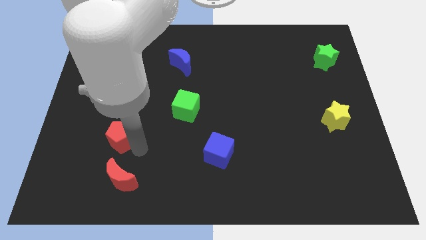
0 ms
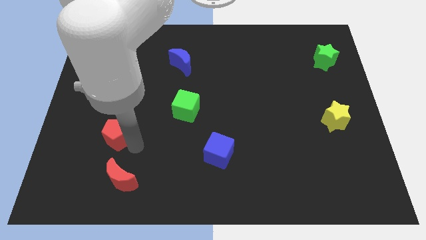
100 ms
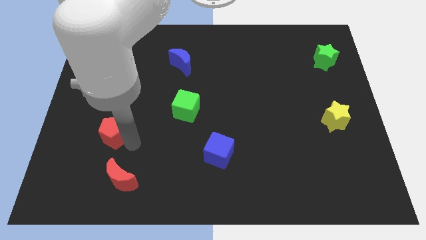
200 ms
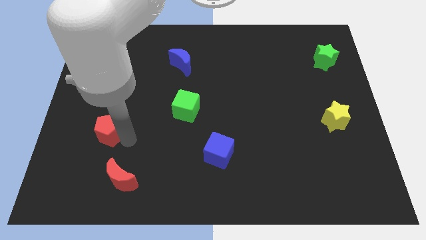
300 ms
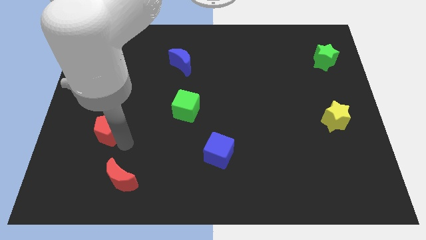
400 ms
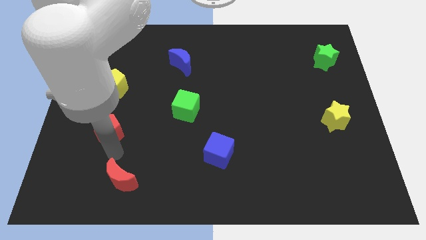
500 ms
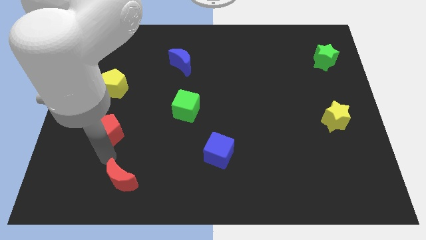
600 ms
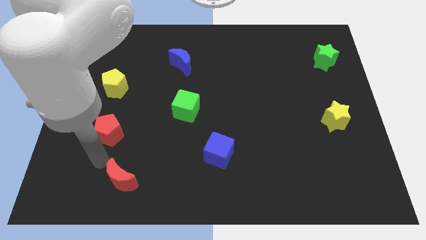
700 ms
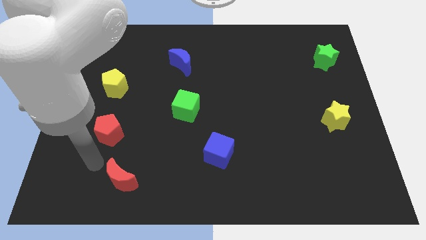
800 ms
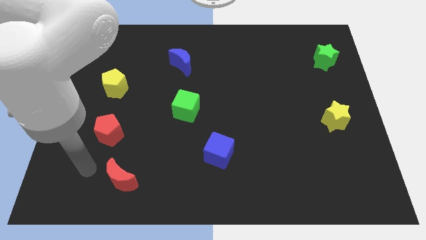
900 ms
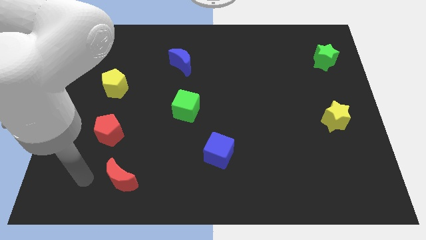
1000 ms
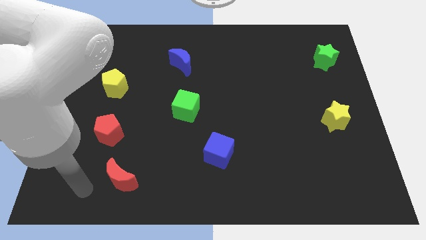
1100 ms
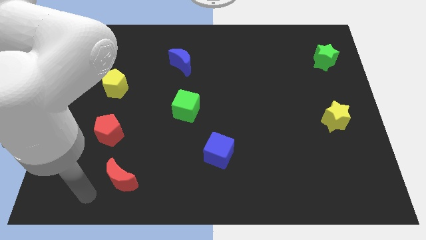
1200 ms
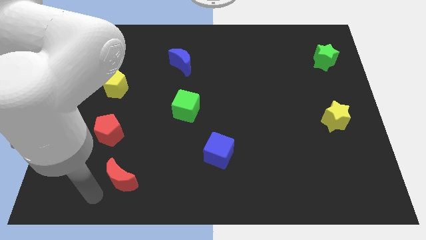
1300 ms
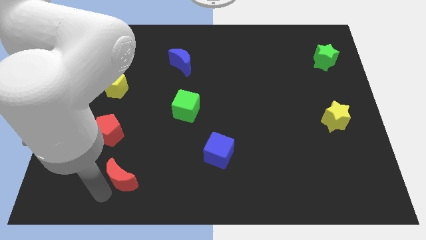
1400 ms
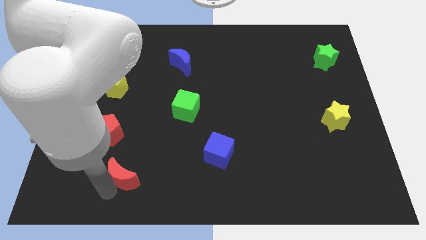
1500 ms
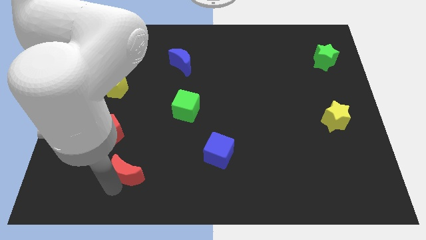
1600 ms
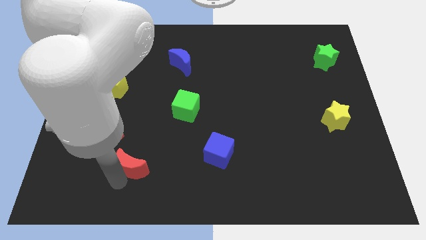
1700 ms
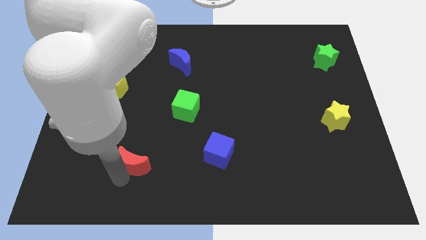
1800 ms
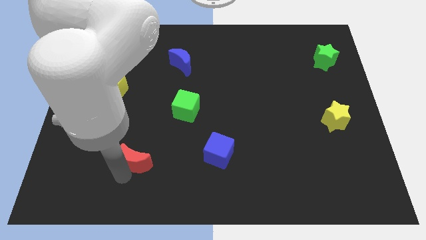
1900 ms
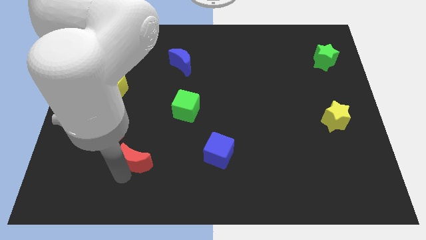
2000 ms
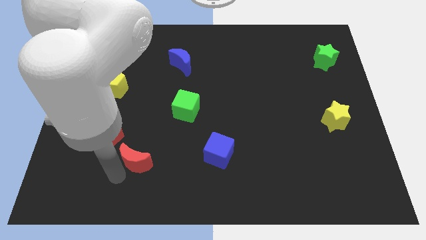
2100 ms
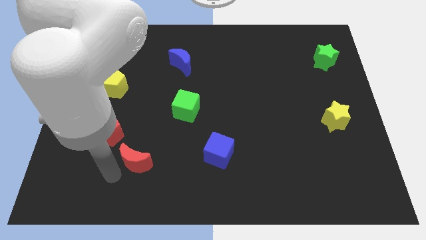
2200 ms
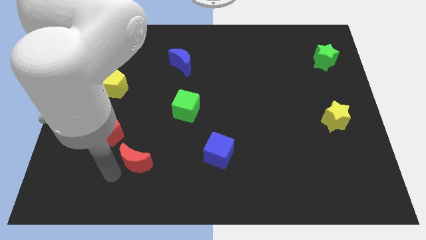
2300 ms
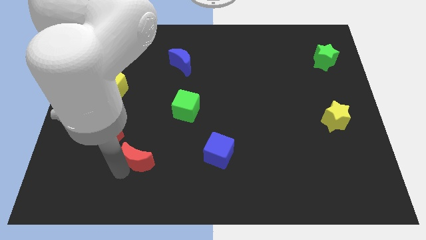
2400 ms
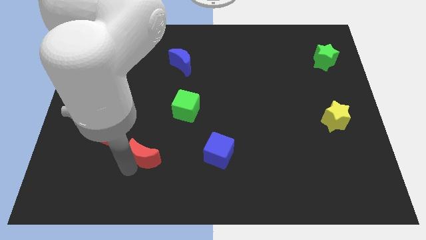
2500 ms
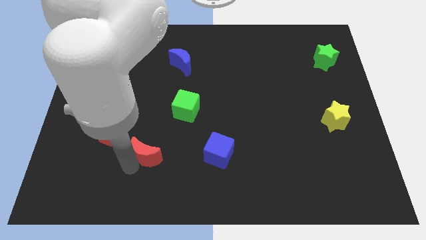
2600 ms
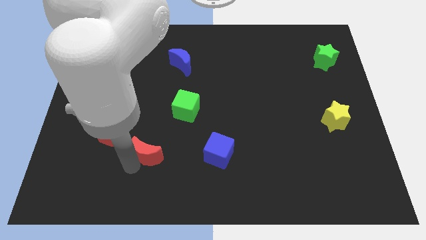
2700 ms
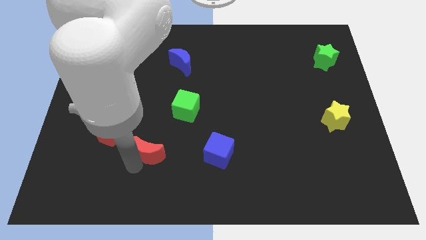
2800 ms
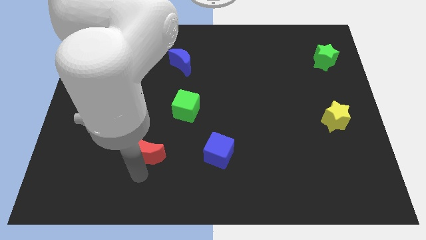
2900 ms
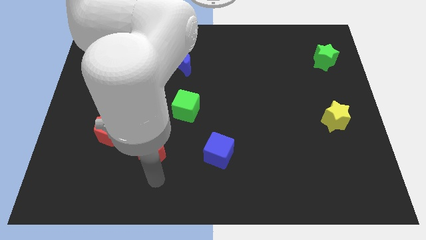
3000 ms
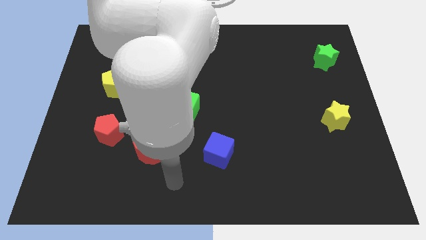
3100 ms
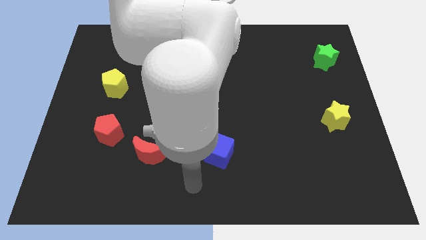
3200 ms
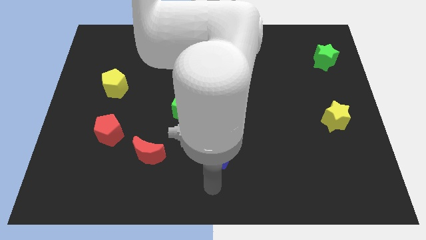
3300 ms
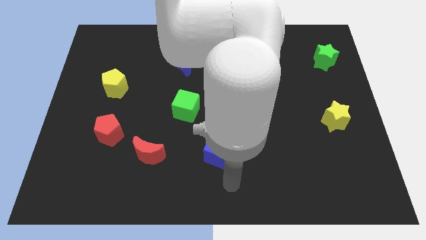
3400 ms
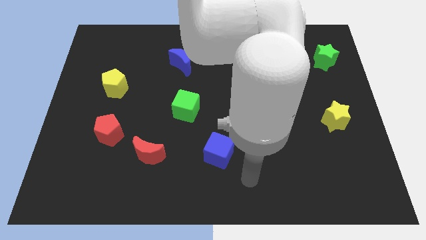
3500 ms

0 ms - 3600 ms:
push the red crescent slightly to the top

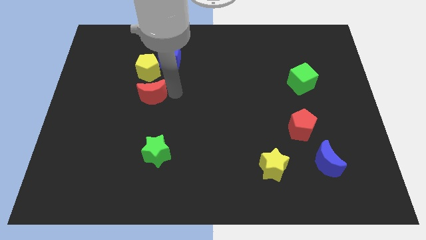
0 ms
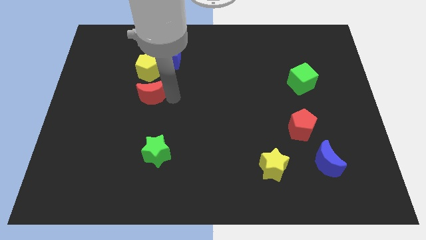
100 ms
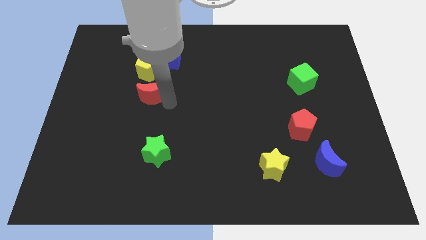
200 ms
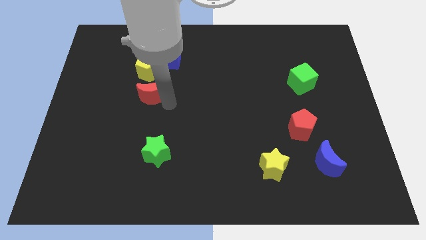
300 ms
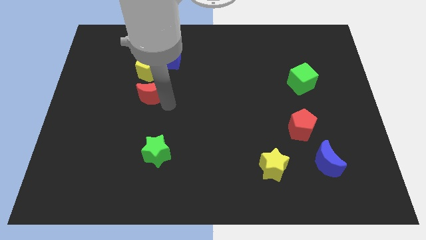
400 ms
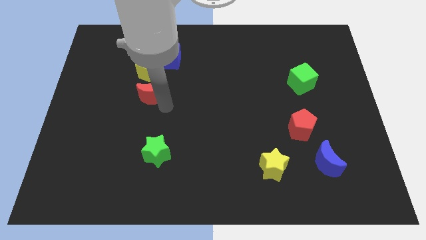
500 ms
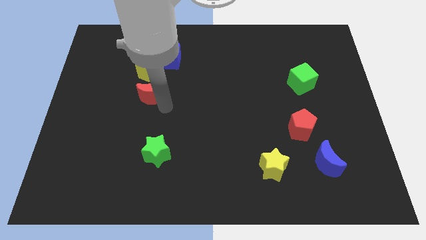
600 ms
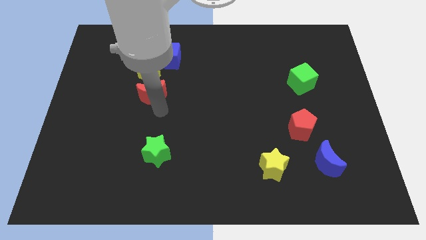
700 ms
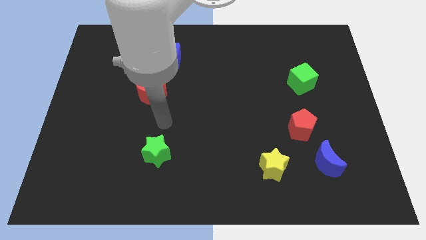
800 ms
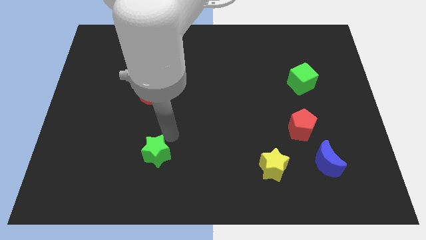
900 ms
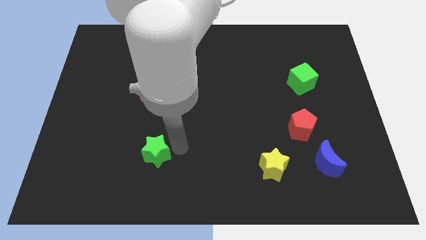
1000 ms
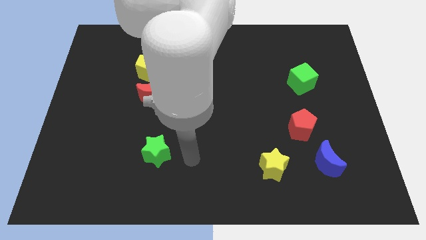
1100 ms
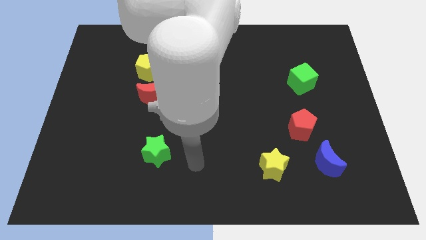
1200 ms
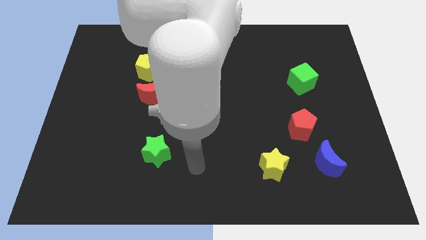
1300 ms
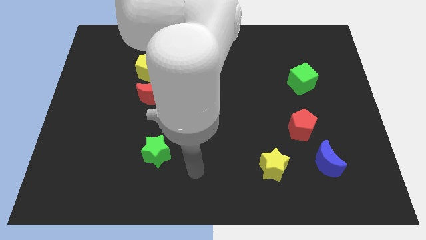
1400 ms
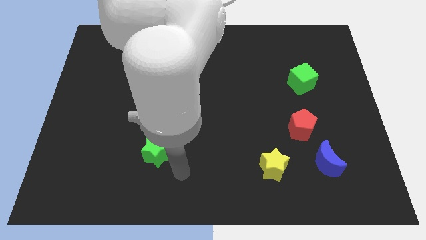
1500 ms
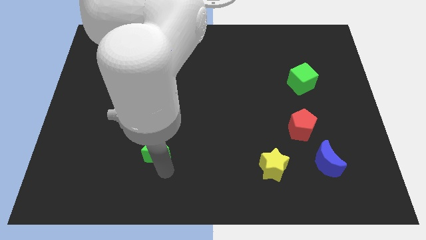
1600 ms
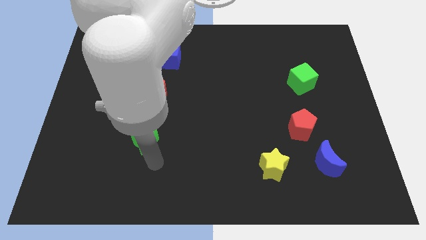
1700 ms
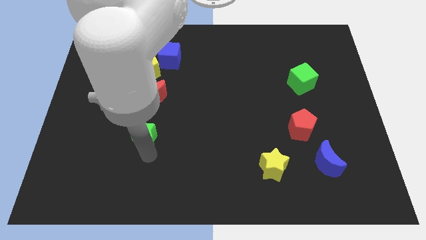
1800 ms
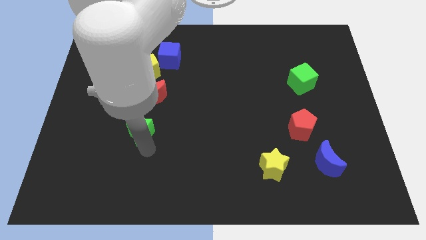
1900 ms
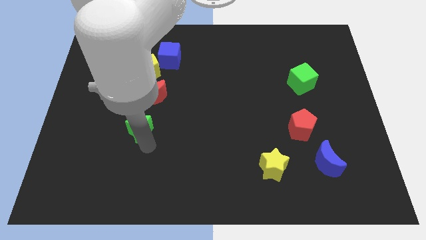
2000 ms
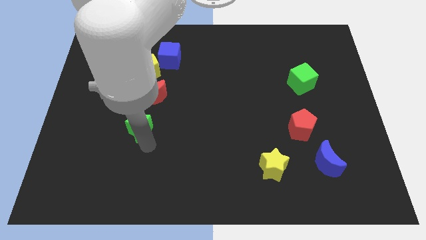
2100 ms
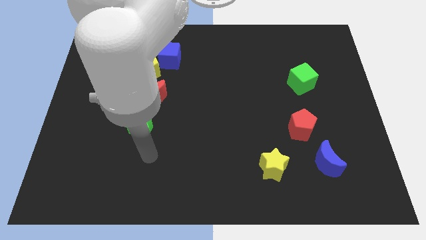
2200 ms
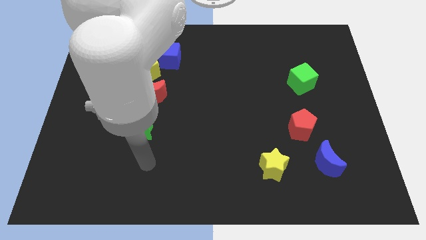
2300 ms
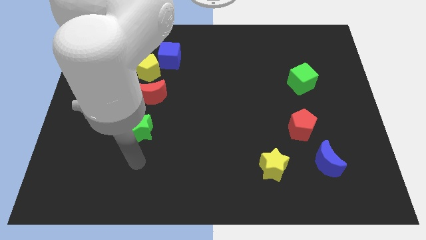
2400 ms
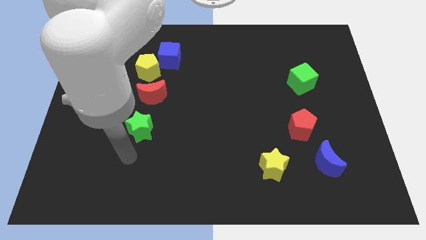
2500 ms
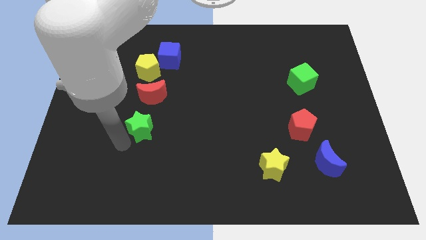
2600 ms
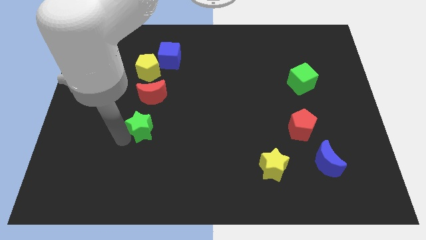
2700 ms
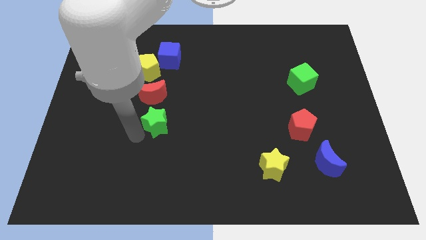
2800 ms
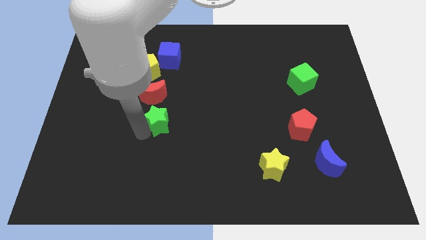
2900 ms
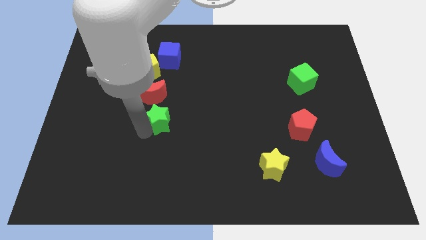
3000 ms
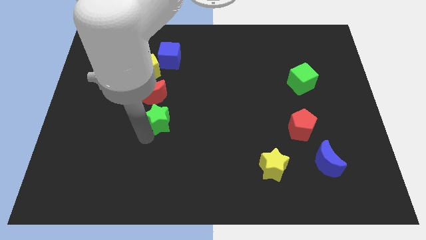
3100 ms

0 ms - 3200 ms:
move the green star vertically to the red crescent

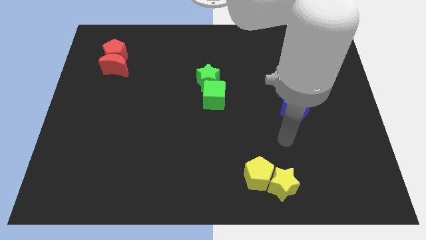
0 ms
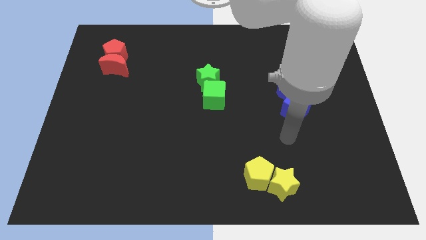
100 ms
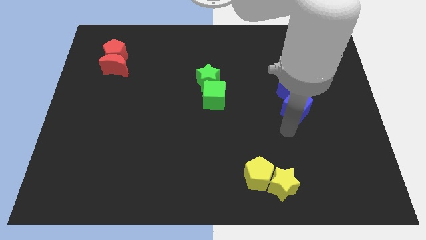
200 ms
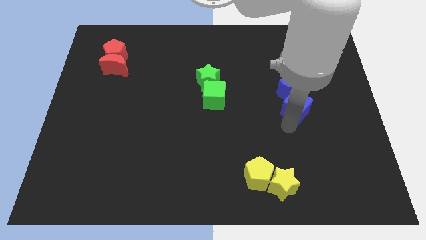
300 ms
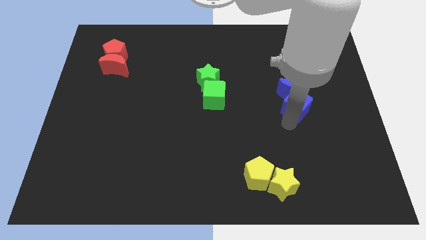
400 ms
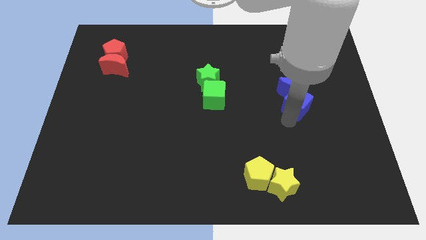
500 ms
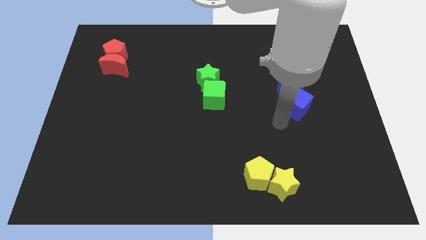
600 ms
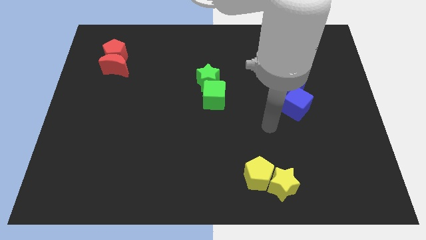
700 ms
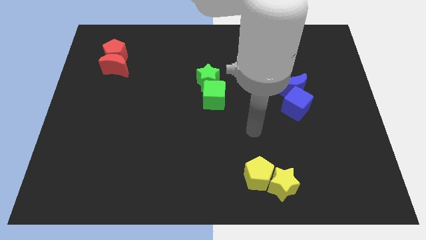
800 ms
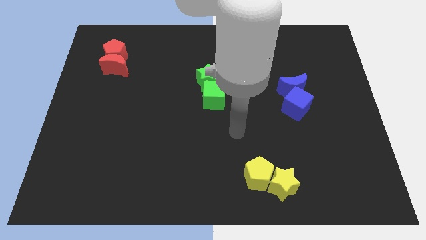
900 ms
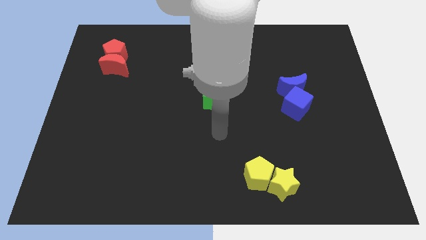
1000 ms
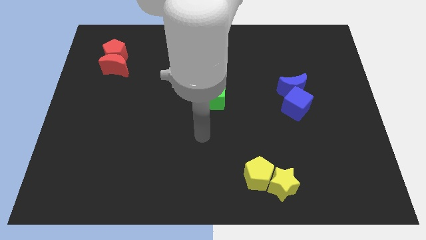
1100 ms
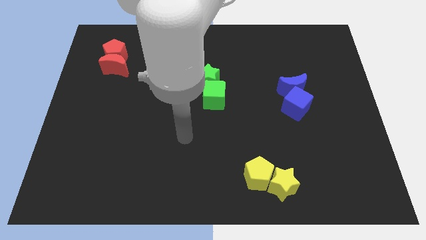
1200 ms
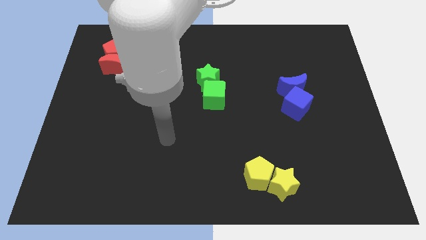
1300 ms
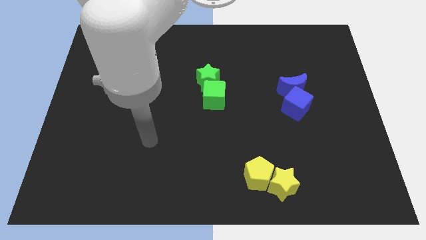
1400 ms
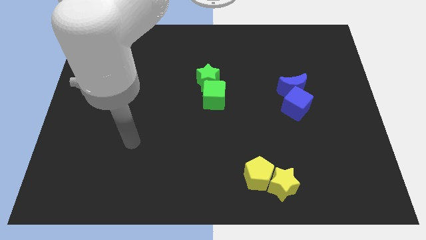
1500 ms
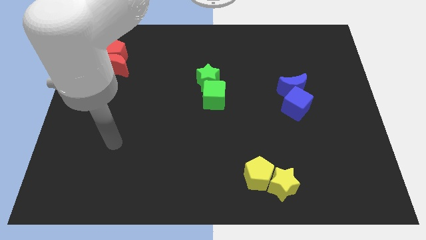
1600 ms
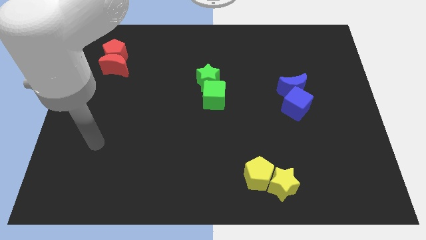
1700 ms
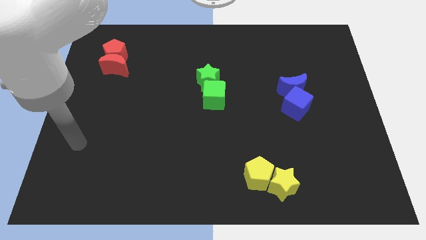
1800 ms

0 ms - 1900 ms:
move away from the blue cube

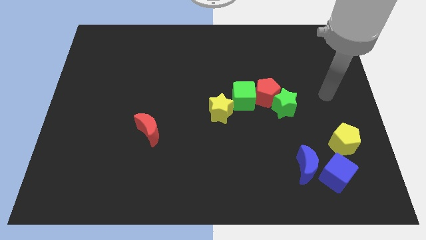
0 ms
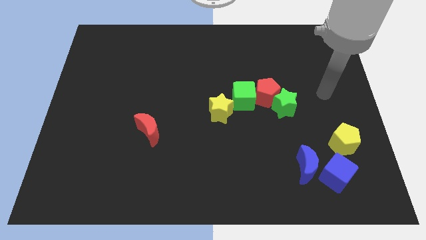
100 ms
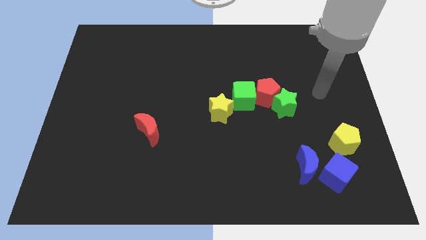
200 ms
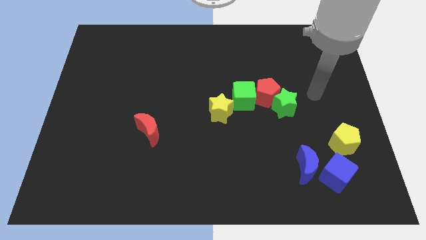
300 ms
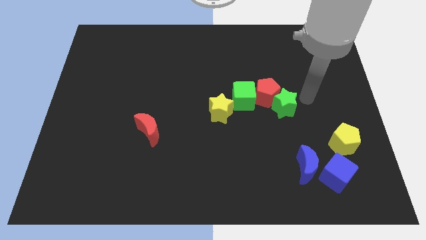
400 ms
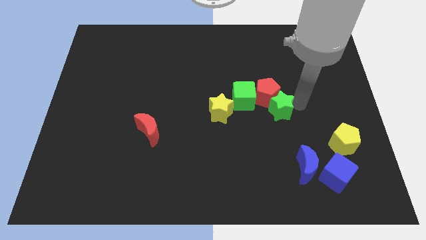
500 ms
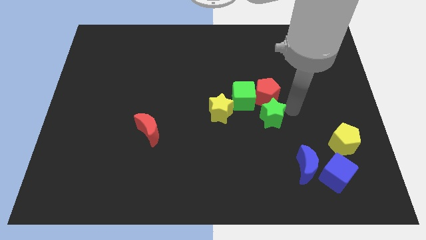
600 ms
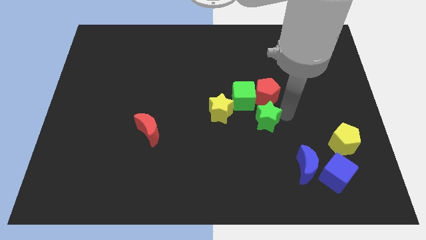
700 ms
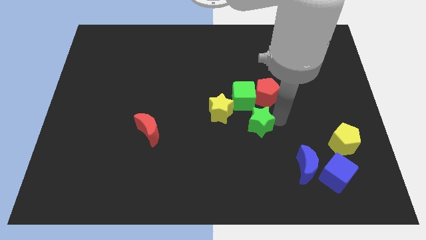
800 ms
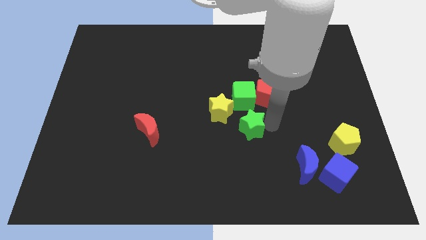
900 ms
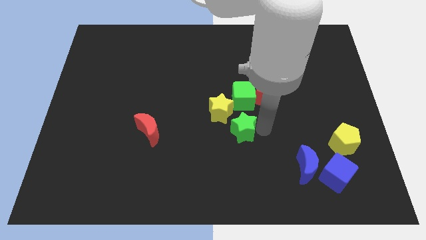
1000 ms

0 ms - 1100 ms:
push the green star to the bottom of the green cube
